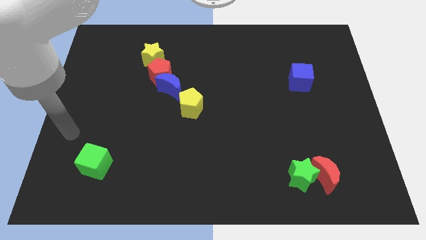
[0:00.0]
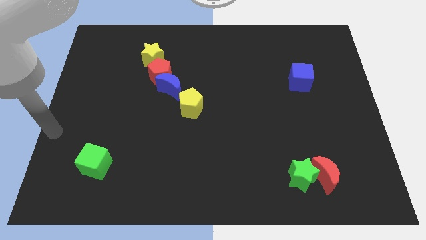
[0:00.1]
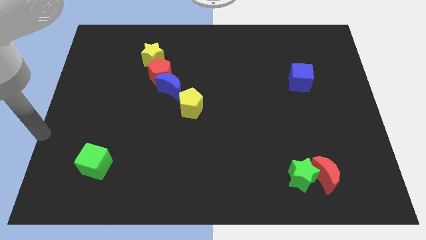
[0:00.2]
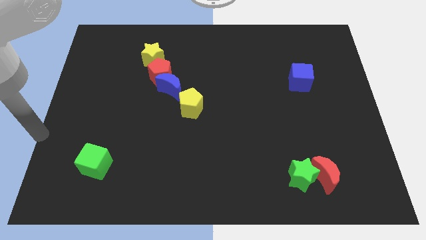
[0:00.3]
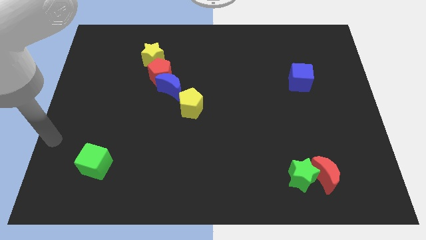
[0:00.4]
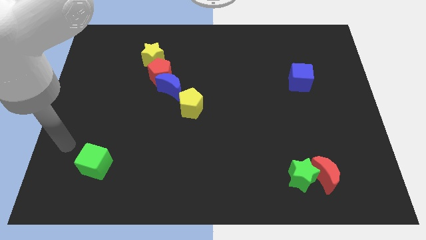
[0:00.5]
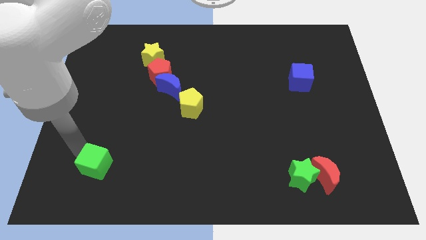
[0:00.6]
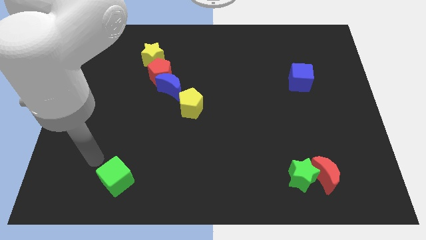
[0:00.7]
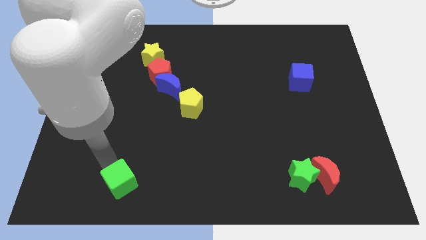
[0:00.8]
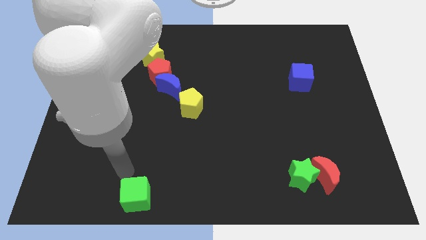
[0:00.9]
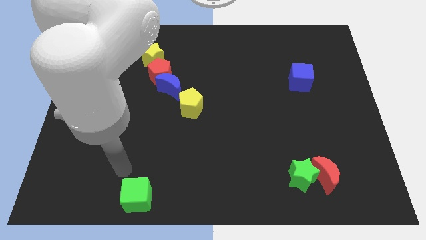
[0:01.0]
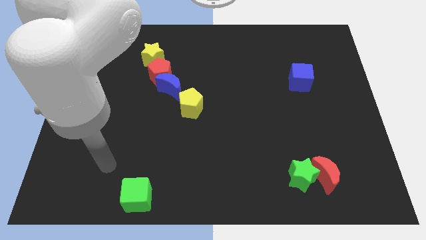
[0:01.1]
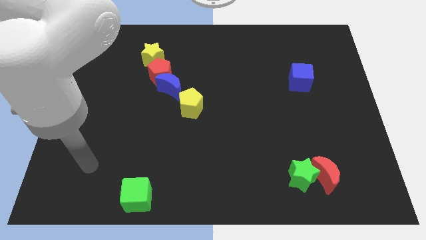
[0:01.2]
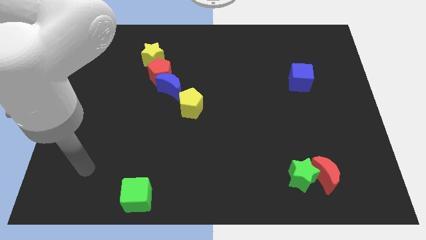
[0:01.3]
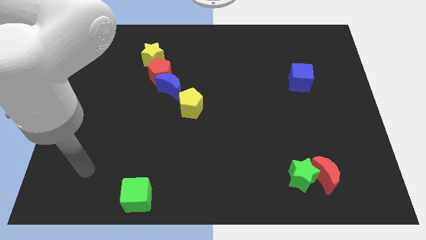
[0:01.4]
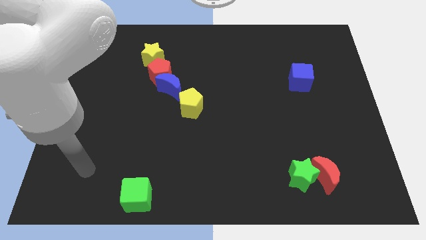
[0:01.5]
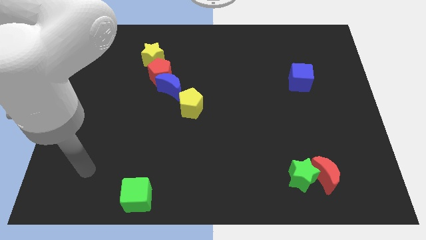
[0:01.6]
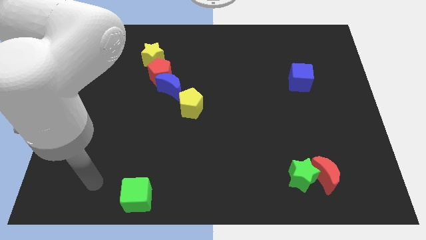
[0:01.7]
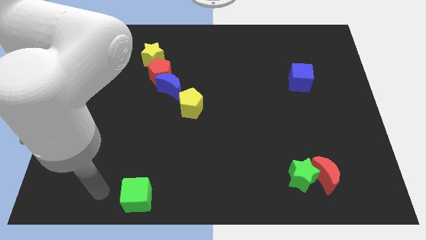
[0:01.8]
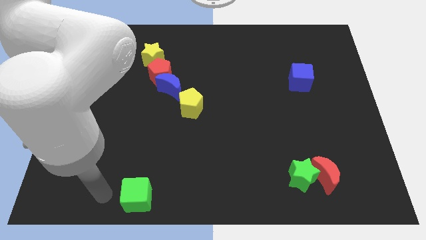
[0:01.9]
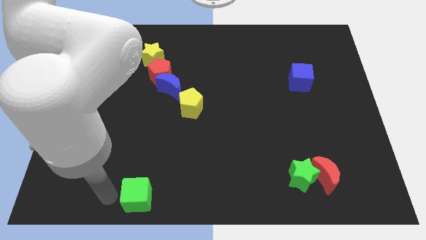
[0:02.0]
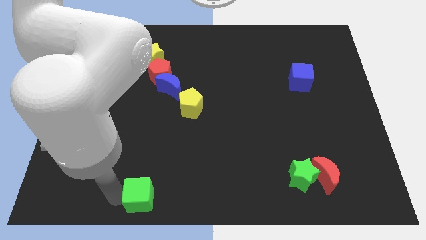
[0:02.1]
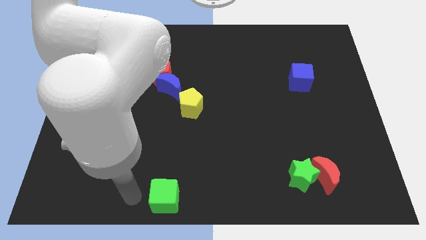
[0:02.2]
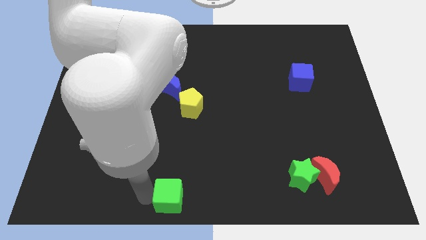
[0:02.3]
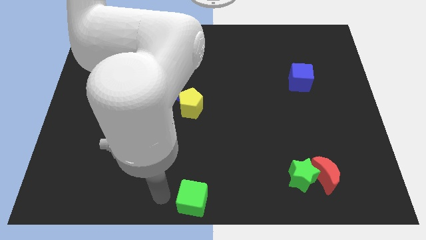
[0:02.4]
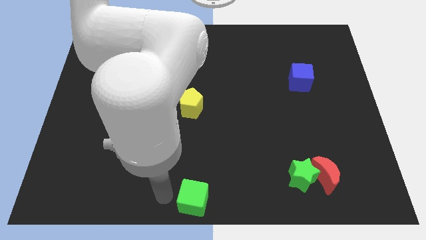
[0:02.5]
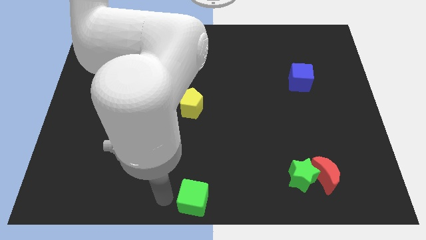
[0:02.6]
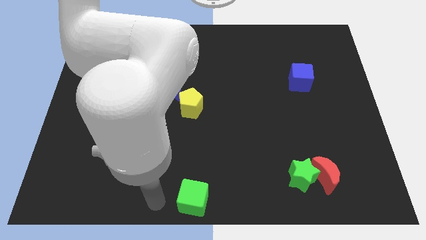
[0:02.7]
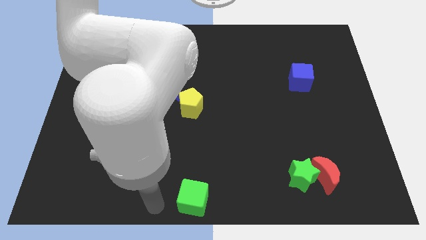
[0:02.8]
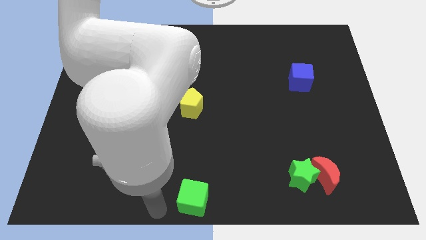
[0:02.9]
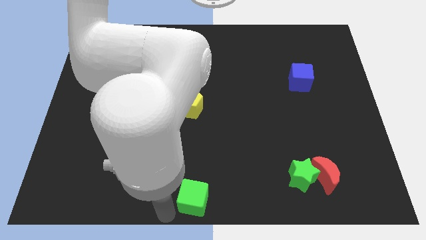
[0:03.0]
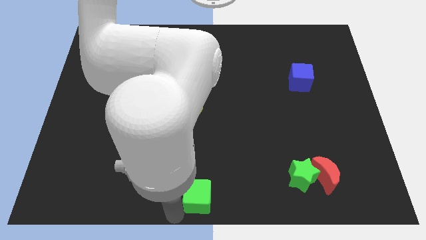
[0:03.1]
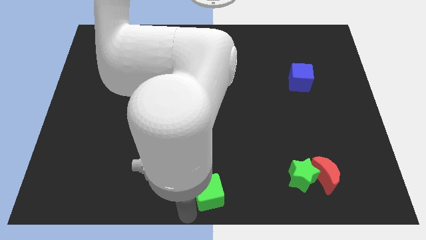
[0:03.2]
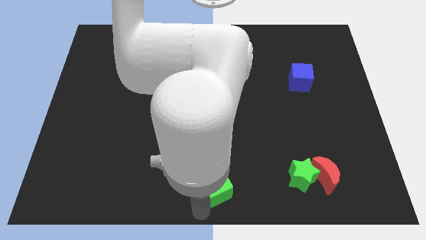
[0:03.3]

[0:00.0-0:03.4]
push the green cube to the bottom center of the board

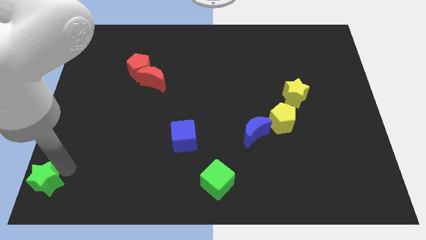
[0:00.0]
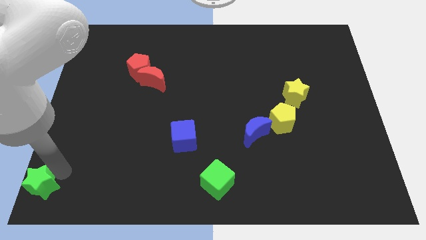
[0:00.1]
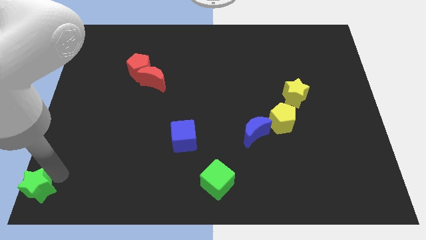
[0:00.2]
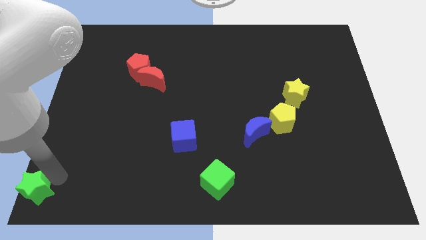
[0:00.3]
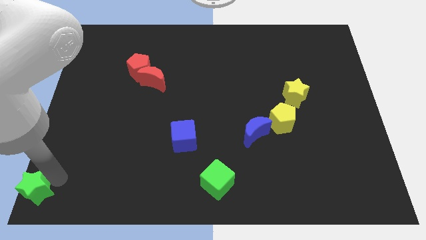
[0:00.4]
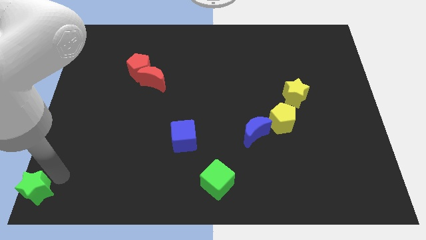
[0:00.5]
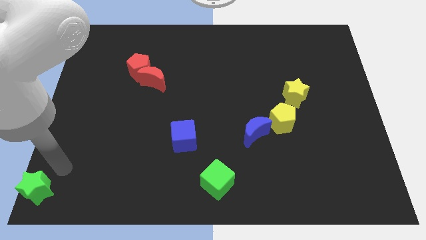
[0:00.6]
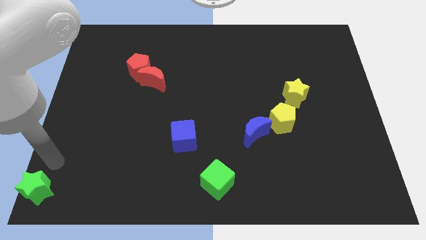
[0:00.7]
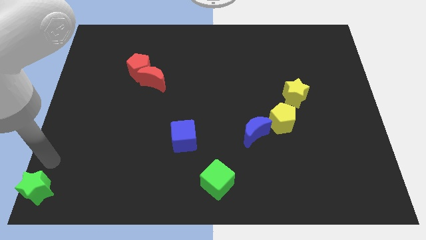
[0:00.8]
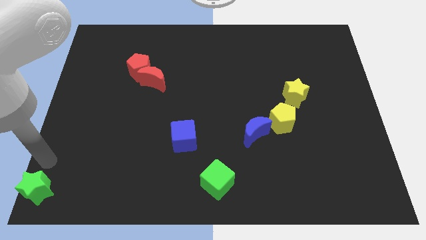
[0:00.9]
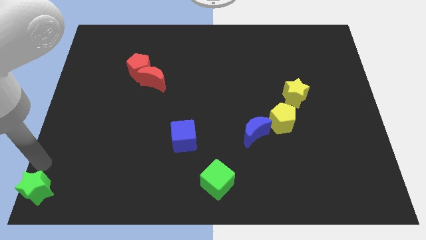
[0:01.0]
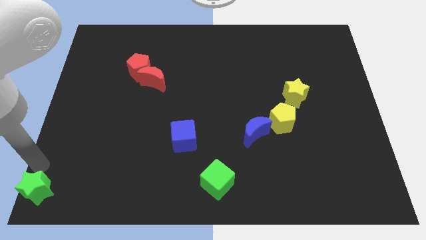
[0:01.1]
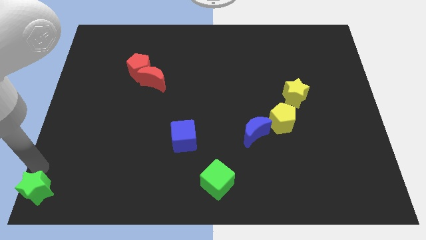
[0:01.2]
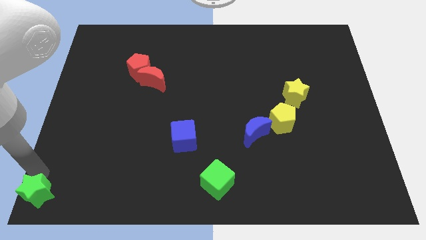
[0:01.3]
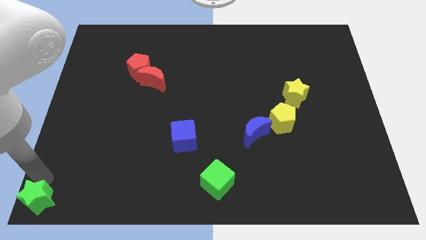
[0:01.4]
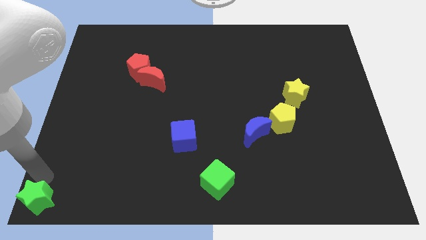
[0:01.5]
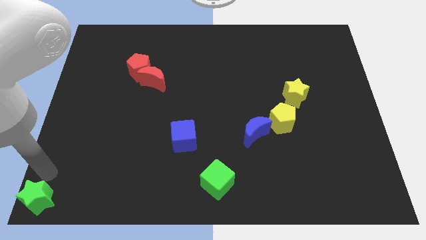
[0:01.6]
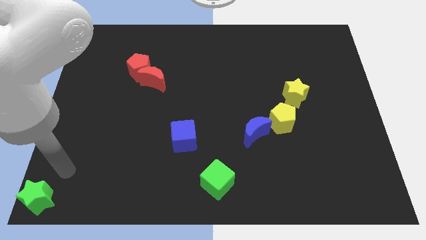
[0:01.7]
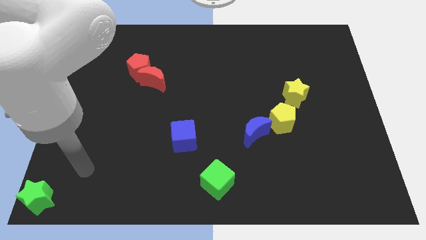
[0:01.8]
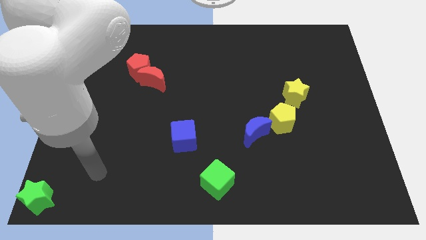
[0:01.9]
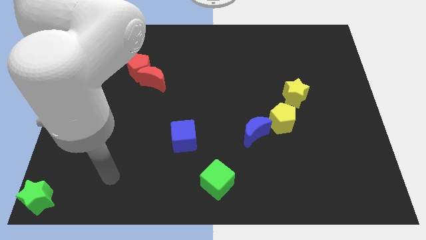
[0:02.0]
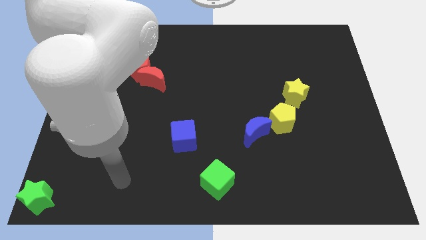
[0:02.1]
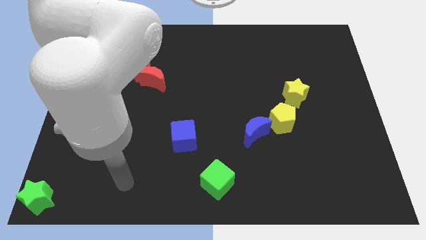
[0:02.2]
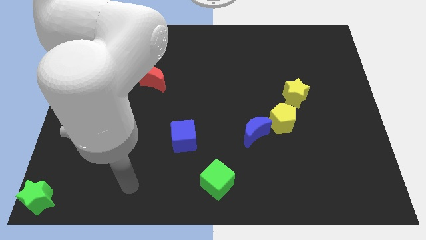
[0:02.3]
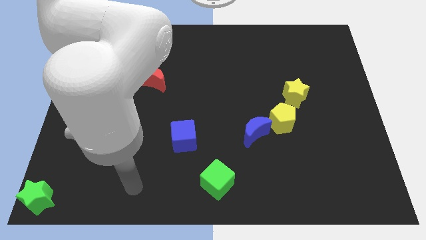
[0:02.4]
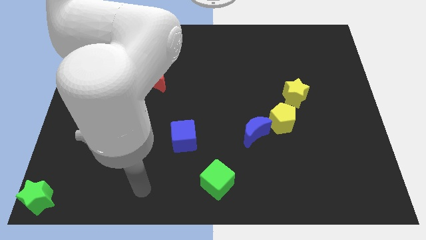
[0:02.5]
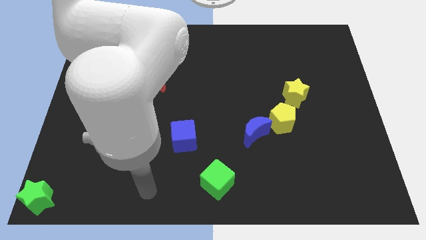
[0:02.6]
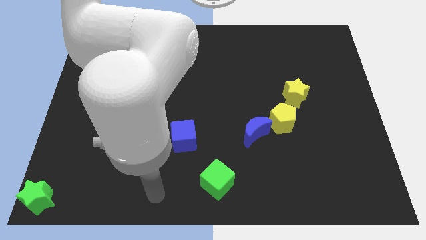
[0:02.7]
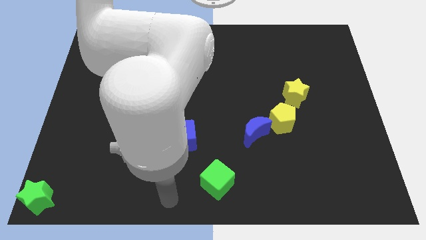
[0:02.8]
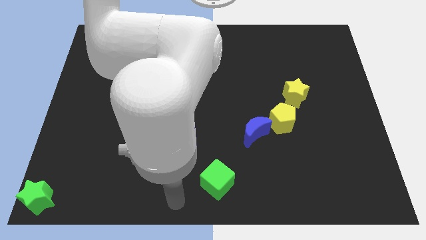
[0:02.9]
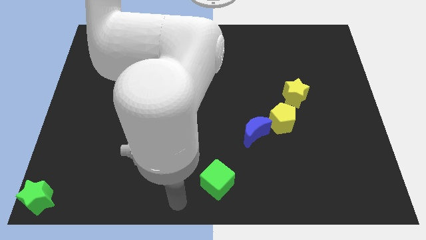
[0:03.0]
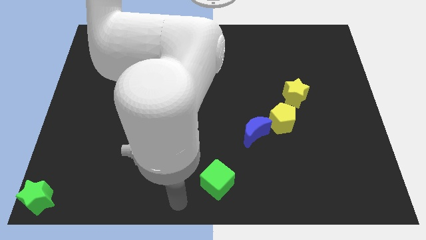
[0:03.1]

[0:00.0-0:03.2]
slide the green star to the bottom left corner

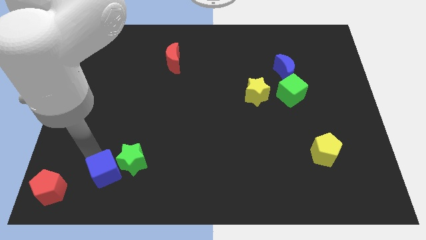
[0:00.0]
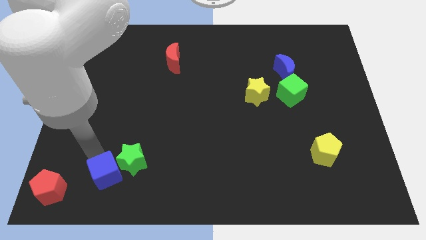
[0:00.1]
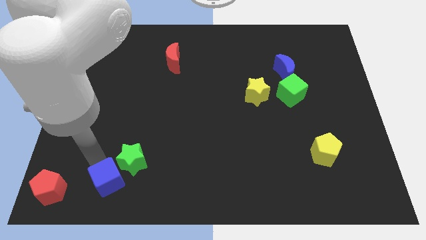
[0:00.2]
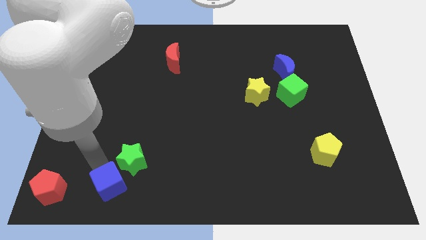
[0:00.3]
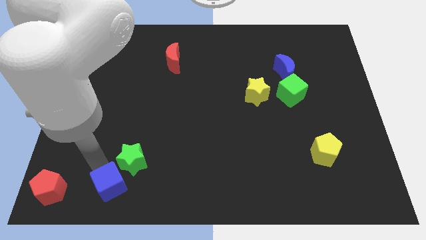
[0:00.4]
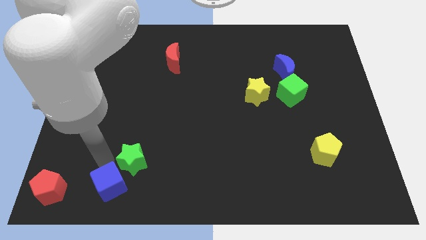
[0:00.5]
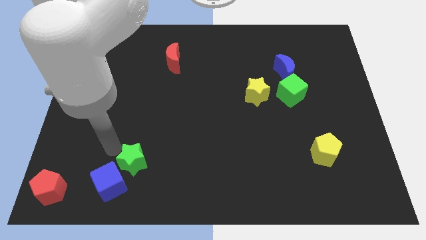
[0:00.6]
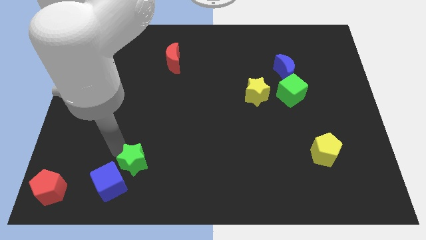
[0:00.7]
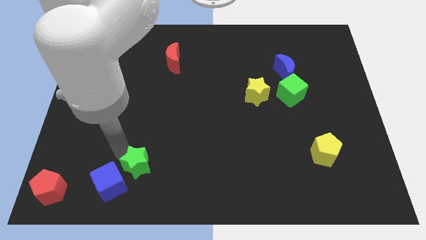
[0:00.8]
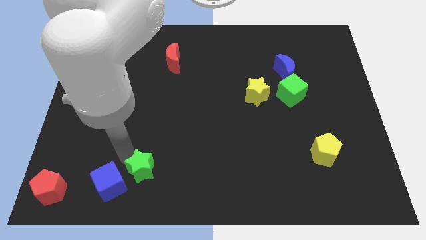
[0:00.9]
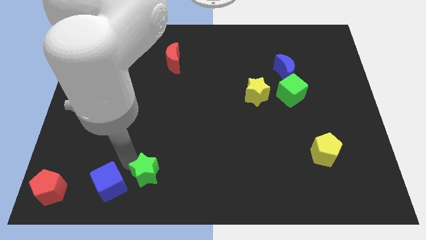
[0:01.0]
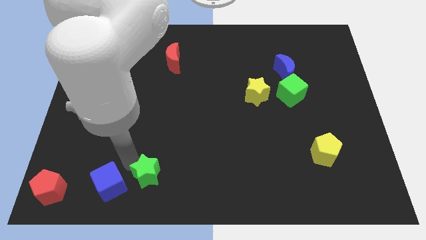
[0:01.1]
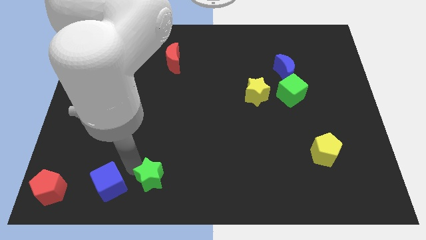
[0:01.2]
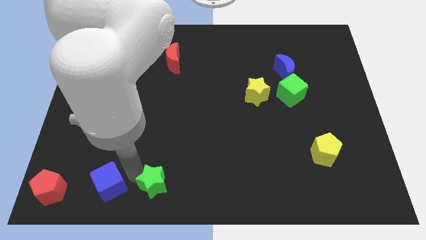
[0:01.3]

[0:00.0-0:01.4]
push the blue cube and green star towards the bottom side of the board

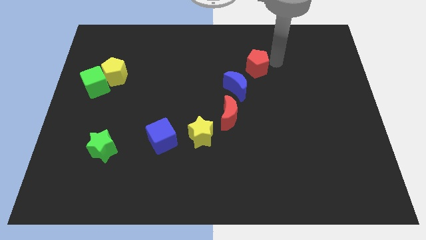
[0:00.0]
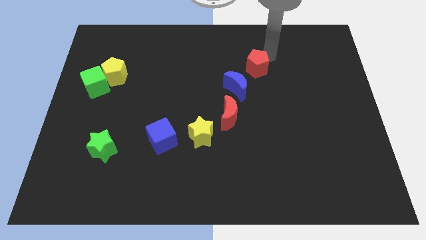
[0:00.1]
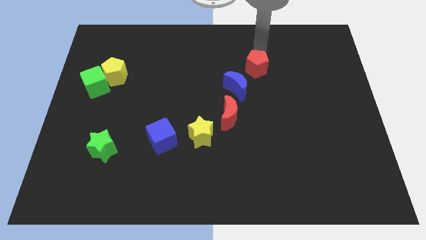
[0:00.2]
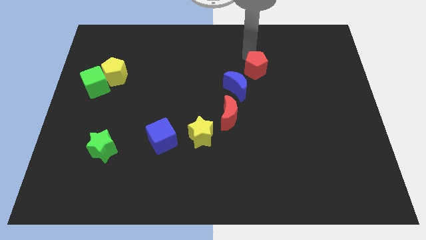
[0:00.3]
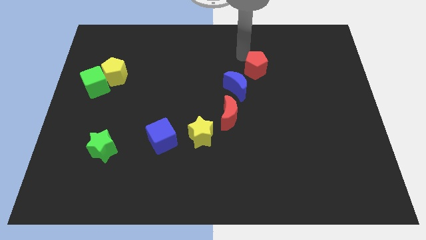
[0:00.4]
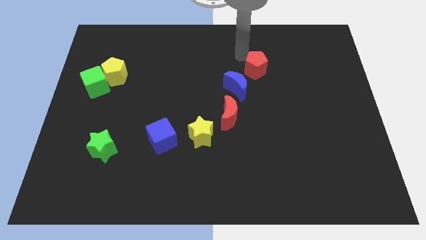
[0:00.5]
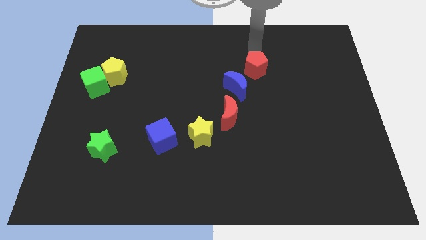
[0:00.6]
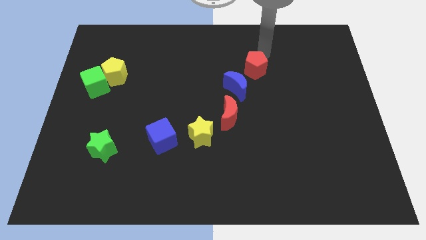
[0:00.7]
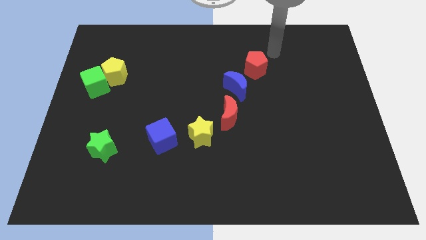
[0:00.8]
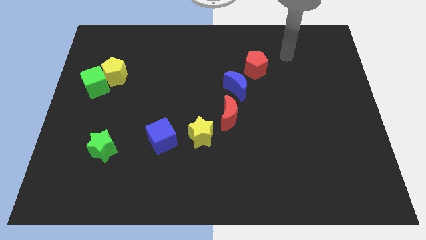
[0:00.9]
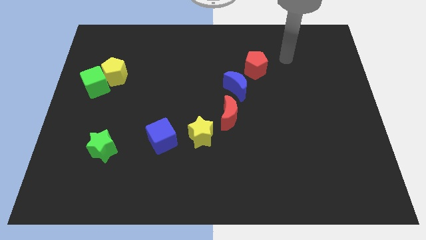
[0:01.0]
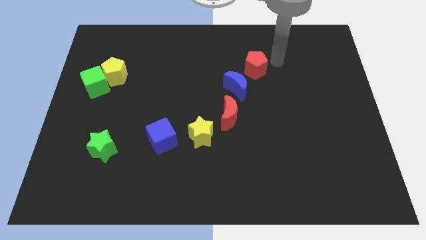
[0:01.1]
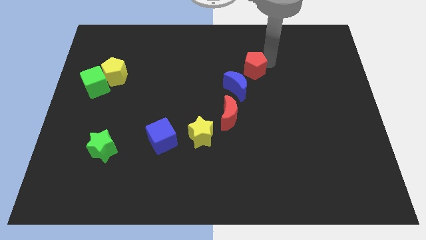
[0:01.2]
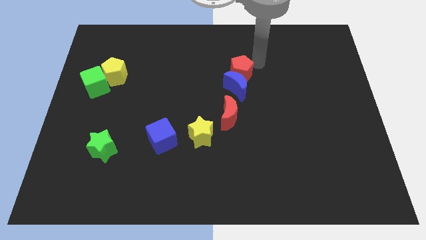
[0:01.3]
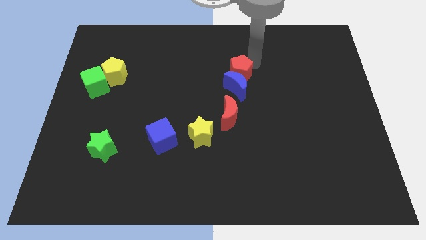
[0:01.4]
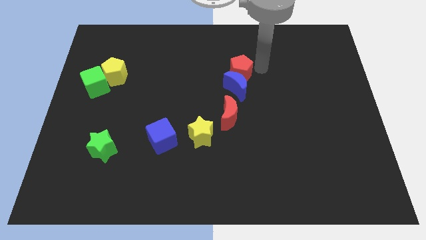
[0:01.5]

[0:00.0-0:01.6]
put the red pentagon at the top of blue moon
